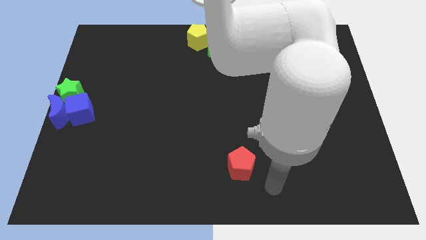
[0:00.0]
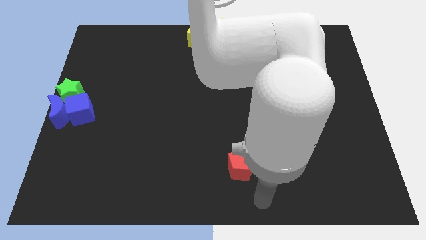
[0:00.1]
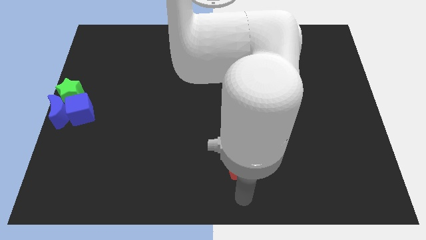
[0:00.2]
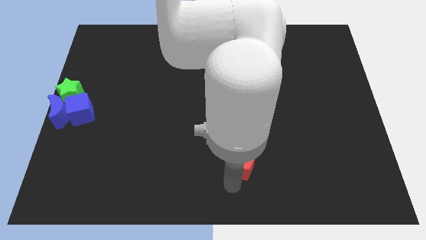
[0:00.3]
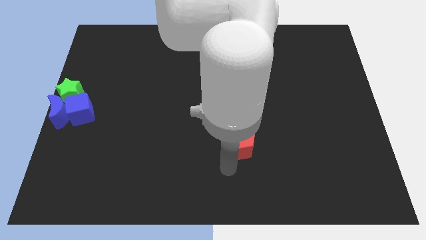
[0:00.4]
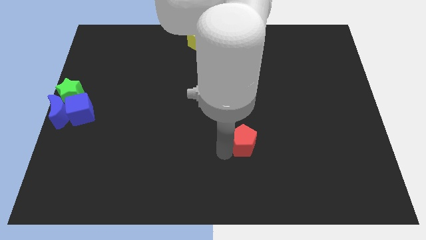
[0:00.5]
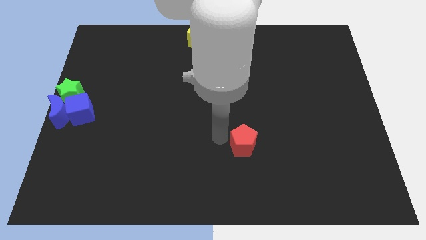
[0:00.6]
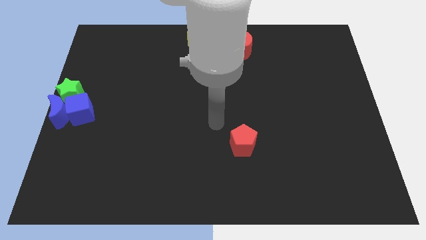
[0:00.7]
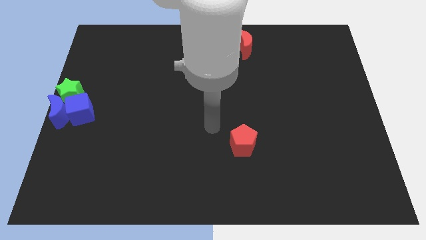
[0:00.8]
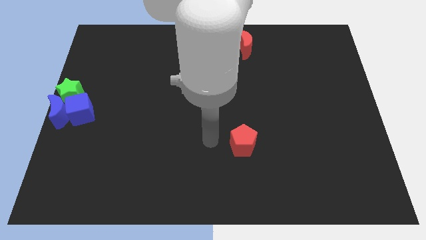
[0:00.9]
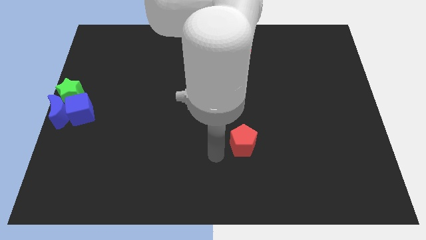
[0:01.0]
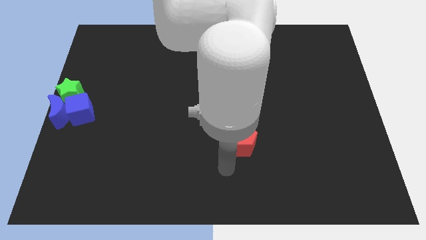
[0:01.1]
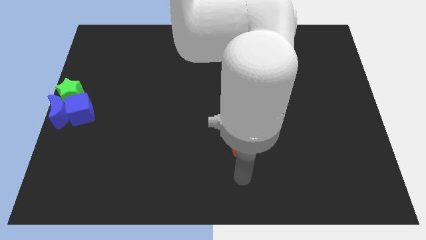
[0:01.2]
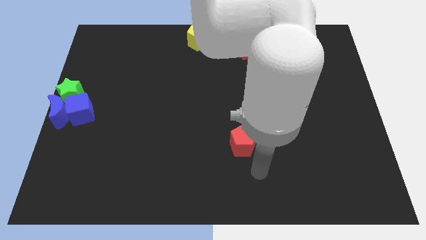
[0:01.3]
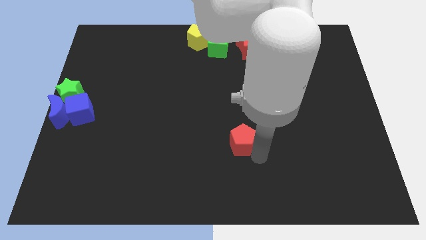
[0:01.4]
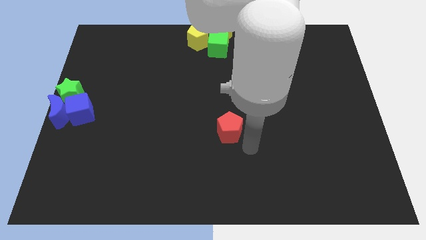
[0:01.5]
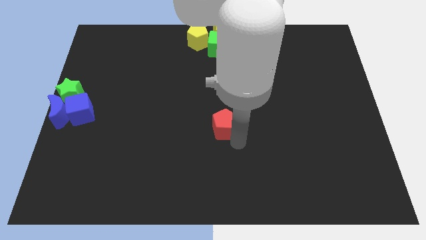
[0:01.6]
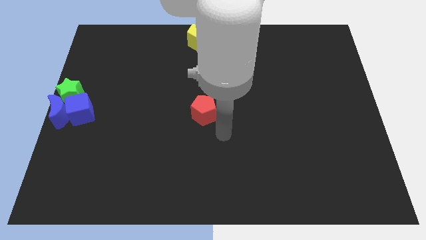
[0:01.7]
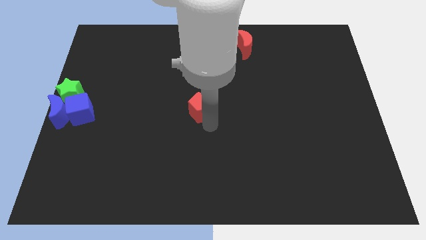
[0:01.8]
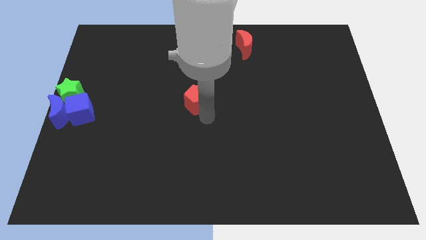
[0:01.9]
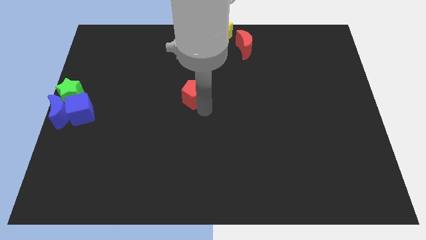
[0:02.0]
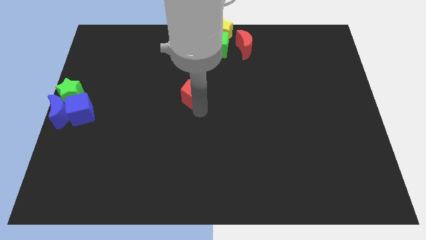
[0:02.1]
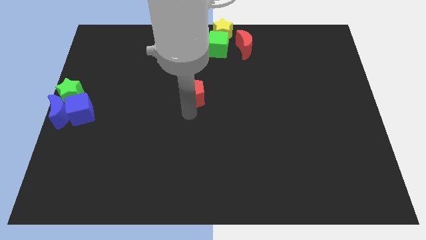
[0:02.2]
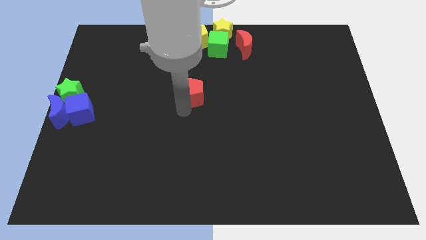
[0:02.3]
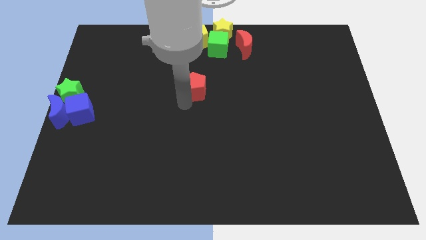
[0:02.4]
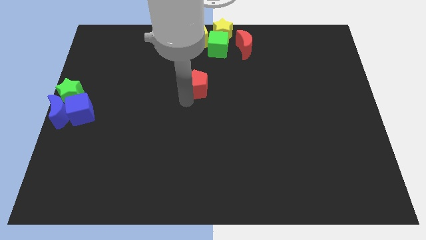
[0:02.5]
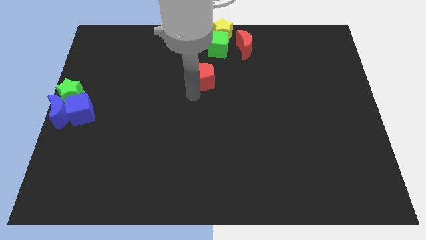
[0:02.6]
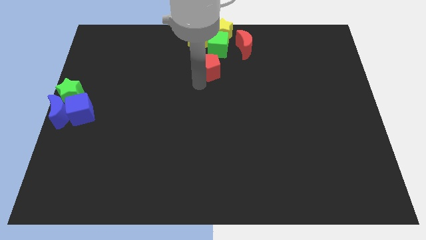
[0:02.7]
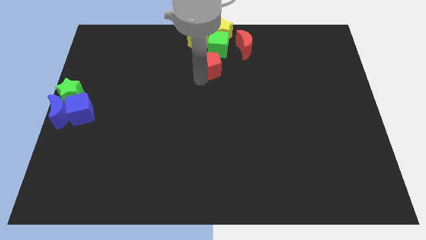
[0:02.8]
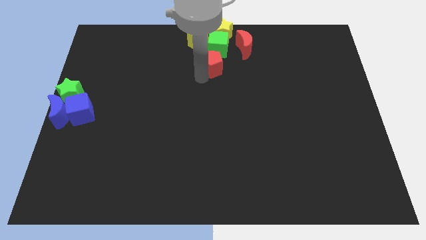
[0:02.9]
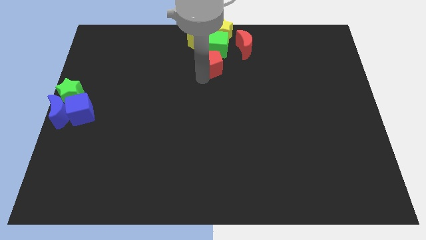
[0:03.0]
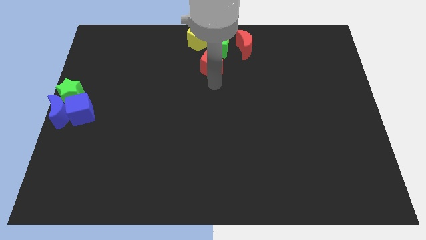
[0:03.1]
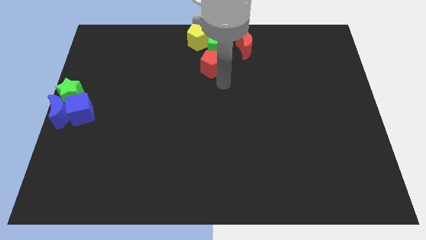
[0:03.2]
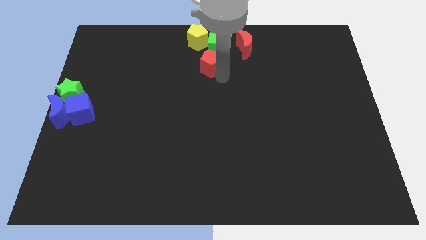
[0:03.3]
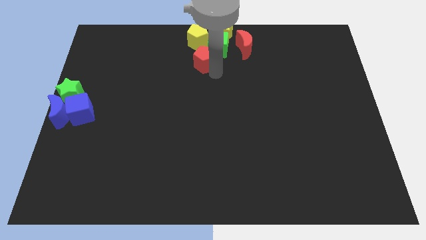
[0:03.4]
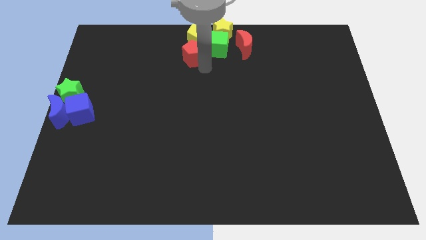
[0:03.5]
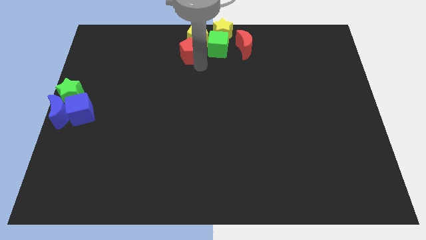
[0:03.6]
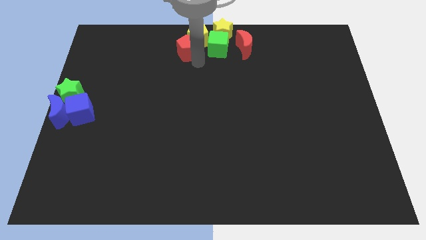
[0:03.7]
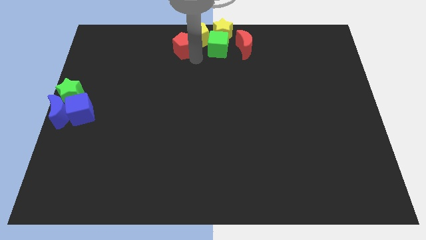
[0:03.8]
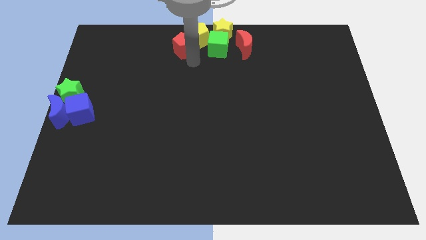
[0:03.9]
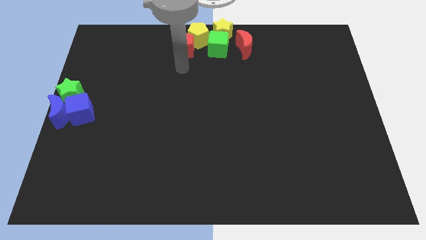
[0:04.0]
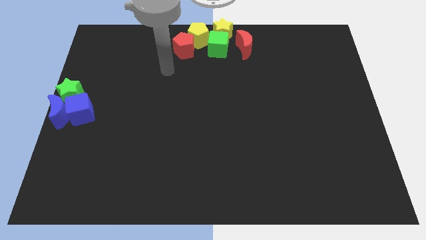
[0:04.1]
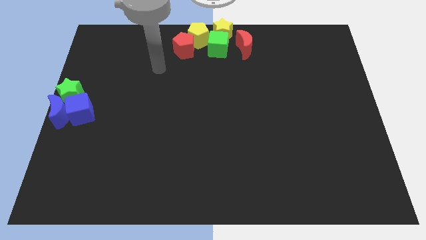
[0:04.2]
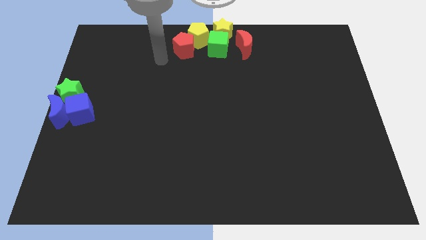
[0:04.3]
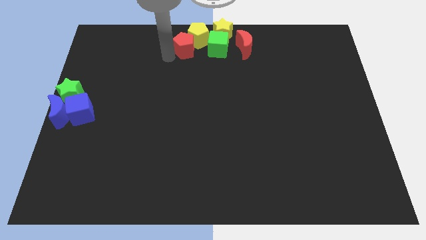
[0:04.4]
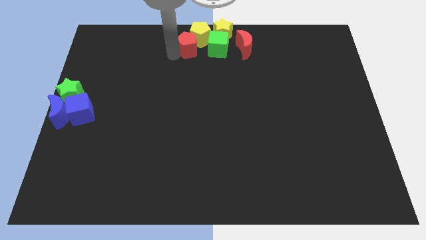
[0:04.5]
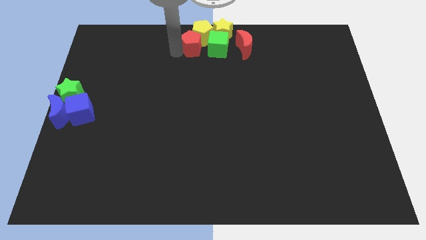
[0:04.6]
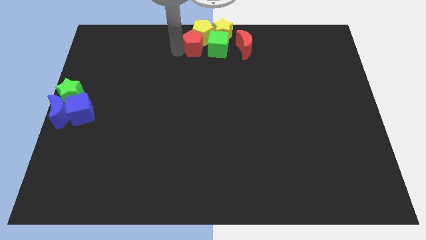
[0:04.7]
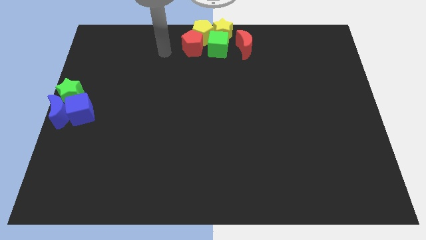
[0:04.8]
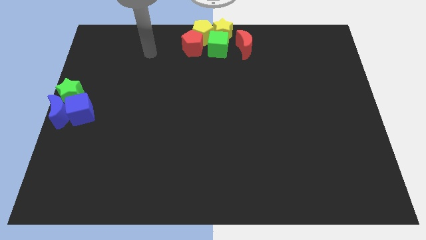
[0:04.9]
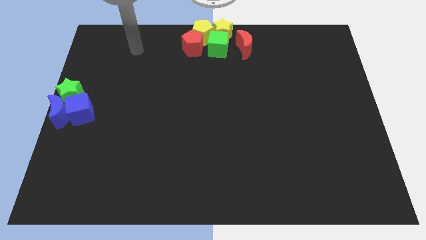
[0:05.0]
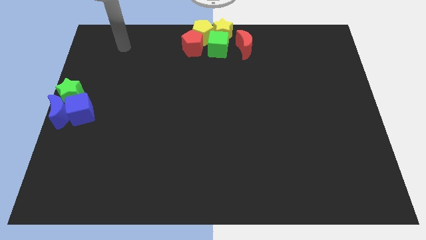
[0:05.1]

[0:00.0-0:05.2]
slide red pentagon towards top center

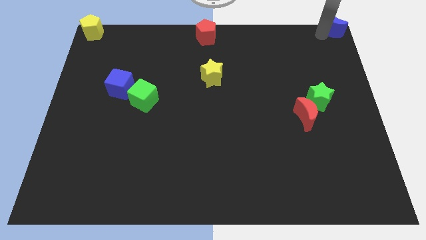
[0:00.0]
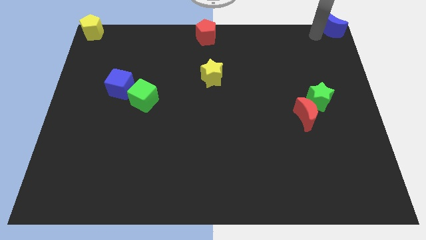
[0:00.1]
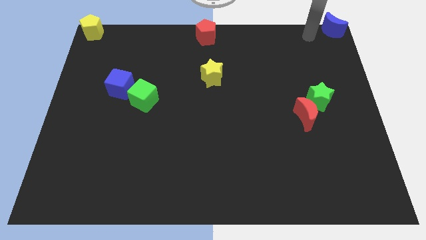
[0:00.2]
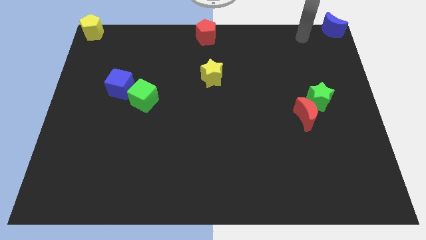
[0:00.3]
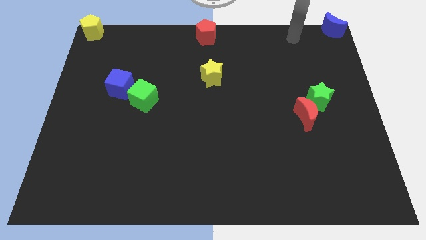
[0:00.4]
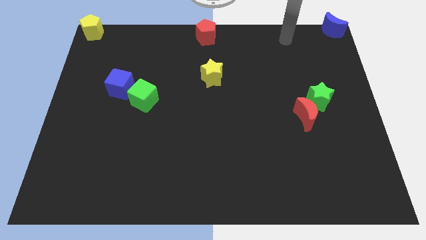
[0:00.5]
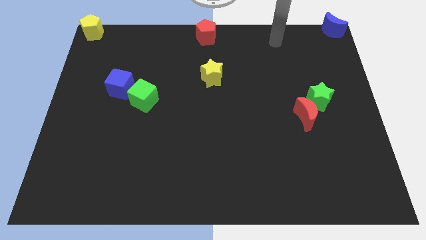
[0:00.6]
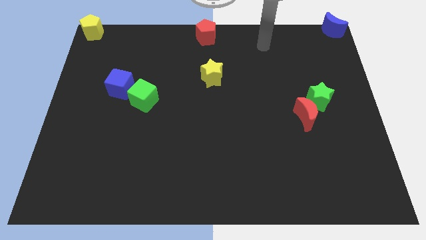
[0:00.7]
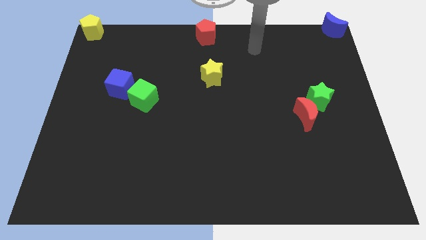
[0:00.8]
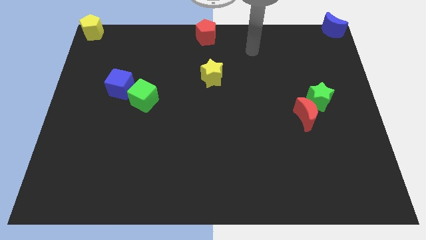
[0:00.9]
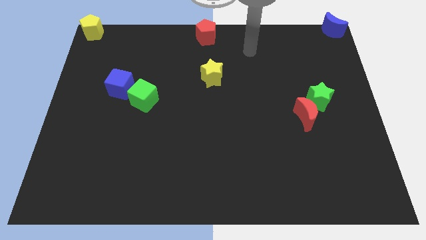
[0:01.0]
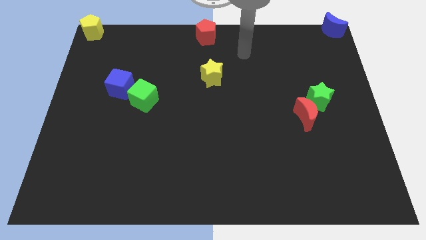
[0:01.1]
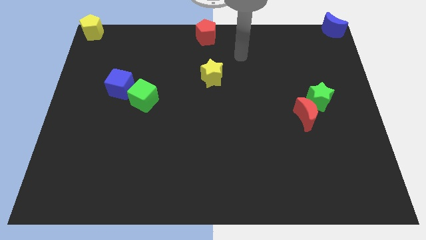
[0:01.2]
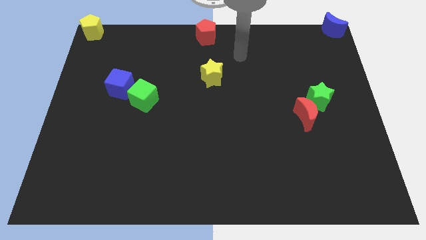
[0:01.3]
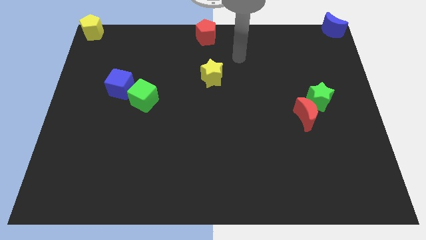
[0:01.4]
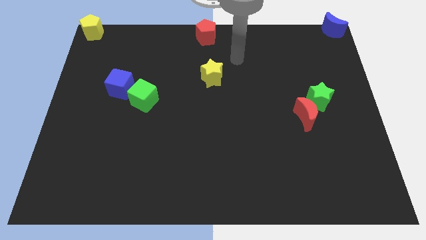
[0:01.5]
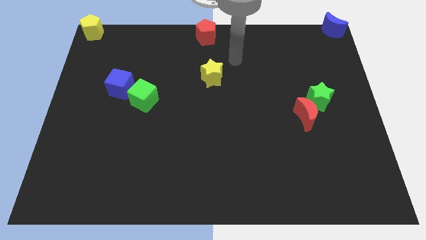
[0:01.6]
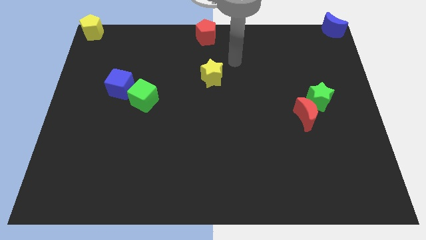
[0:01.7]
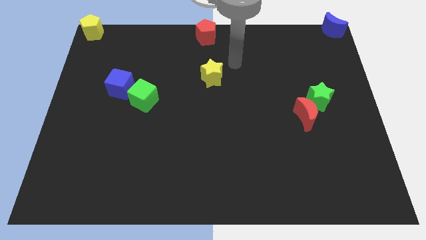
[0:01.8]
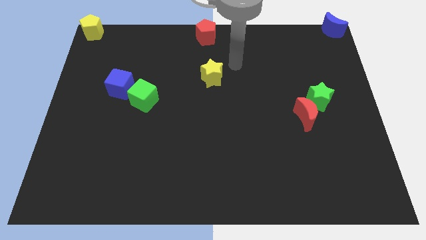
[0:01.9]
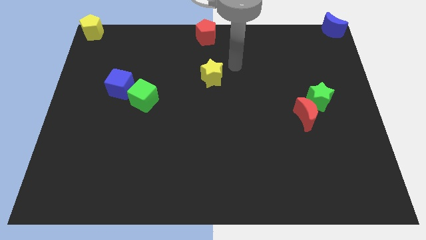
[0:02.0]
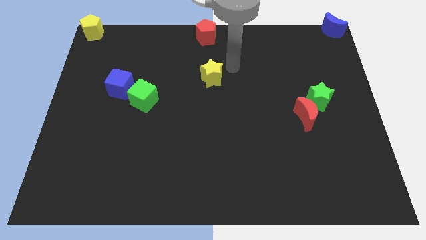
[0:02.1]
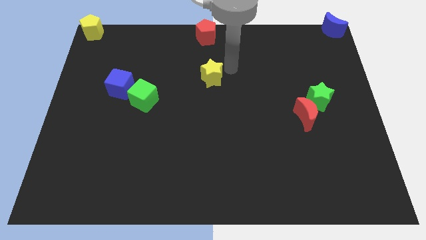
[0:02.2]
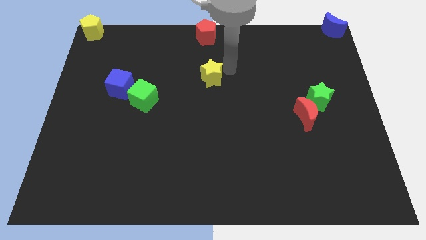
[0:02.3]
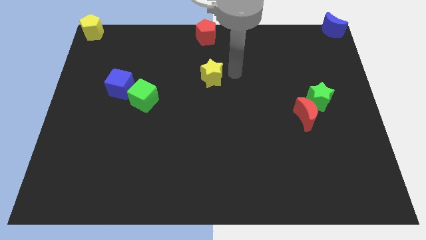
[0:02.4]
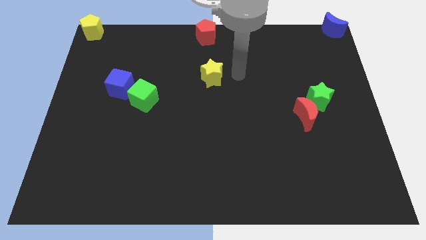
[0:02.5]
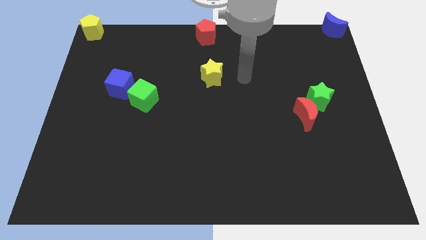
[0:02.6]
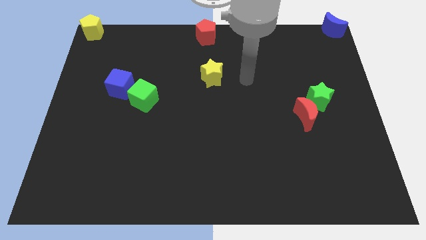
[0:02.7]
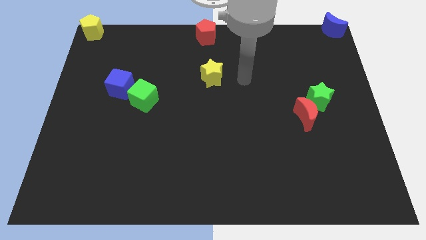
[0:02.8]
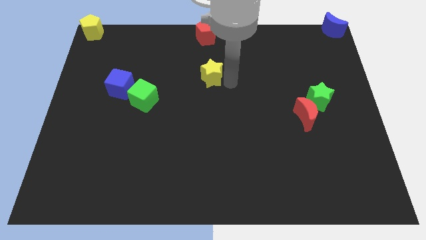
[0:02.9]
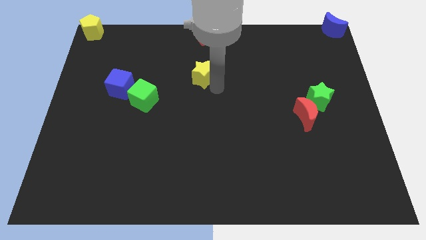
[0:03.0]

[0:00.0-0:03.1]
move your arm to the right of yellow star

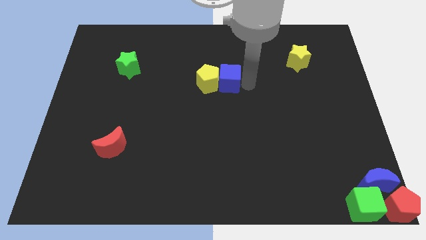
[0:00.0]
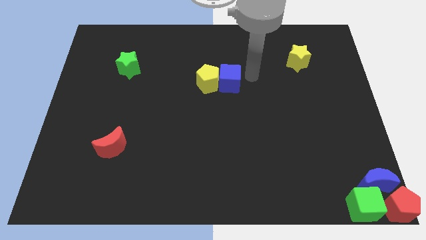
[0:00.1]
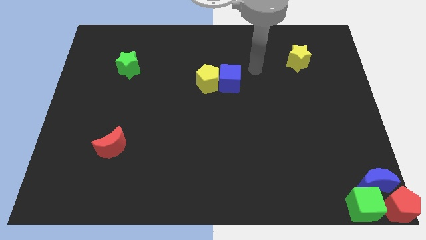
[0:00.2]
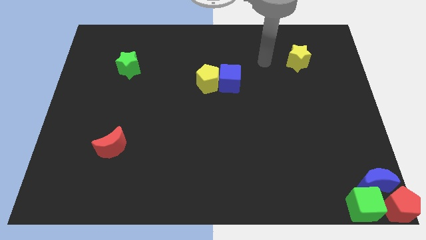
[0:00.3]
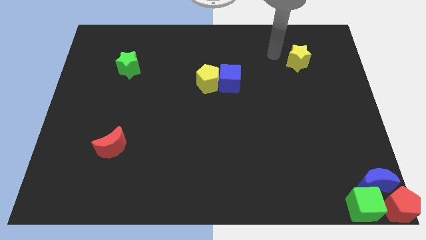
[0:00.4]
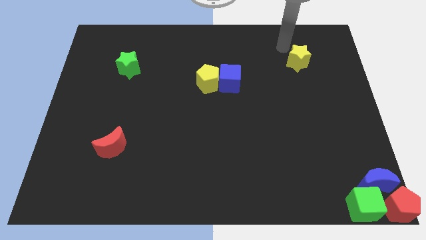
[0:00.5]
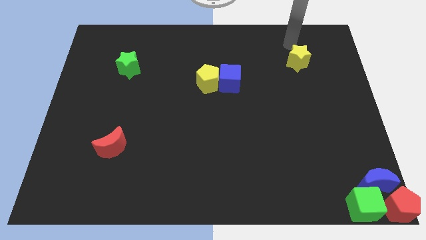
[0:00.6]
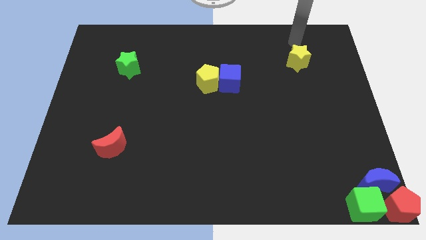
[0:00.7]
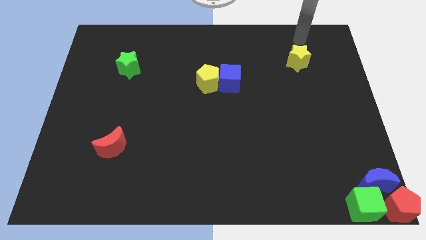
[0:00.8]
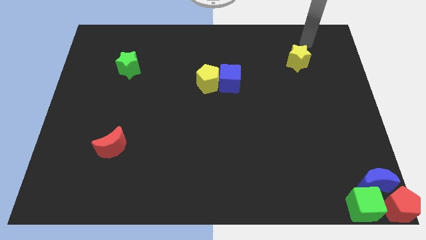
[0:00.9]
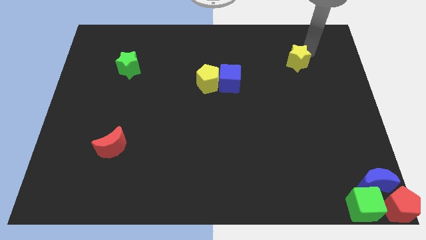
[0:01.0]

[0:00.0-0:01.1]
place the arm at top of the yellow star
